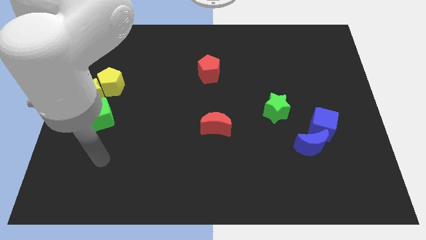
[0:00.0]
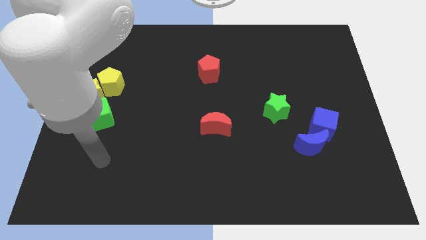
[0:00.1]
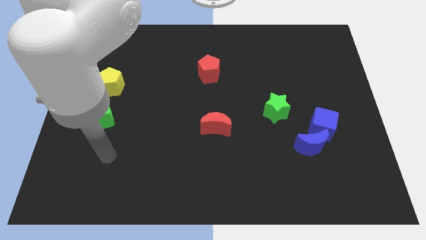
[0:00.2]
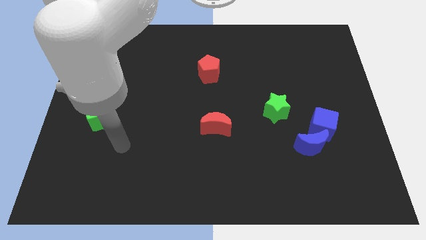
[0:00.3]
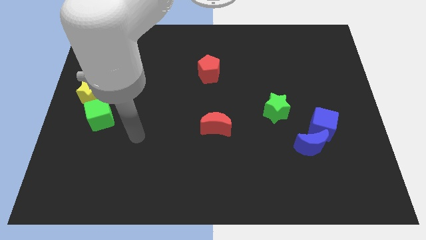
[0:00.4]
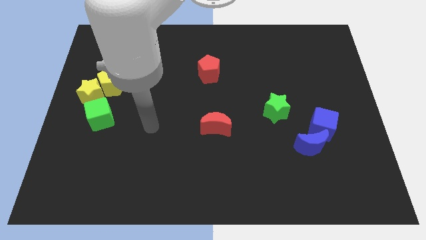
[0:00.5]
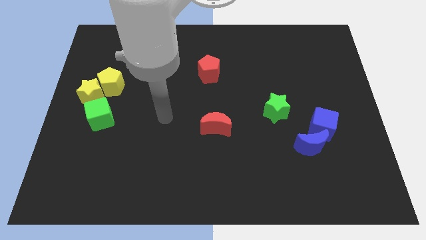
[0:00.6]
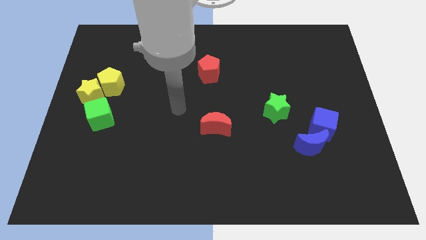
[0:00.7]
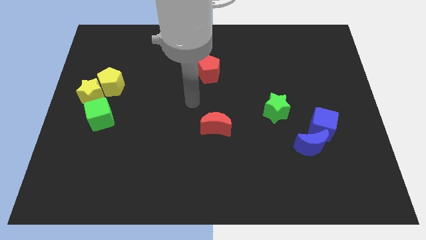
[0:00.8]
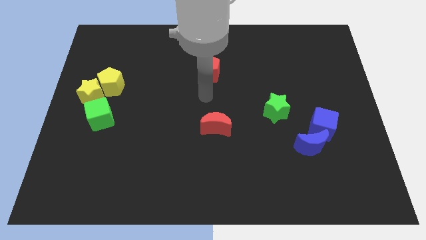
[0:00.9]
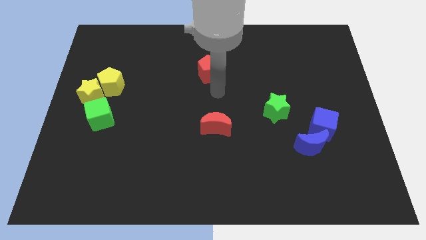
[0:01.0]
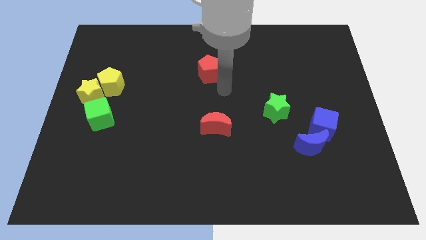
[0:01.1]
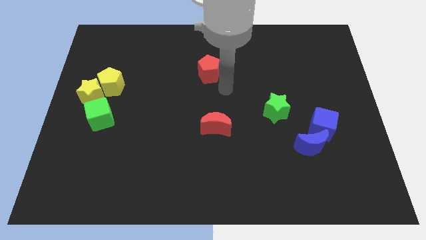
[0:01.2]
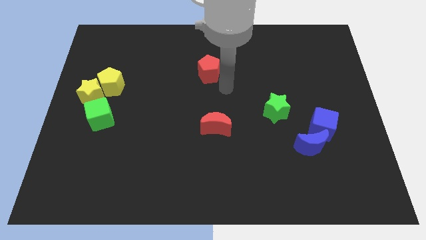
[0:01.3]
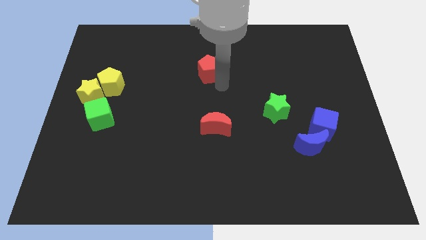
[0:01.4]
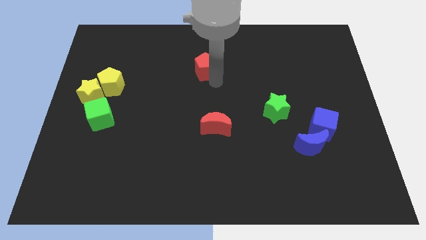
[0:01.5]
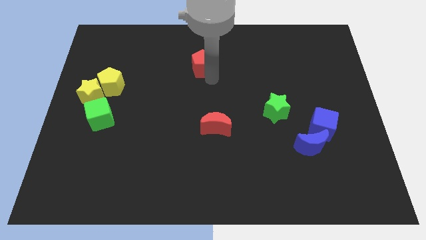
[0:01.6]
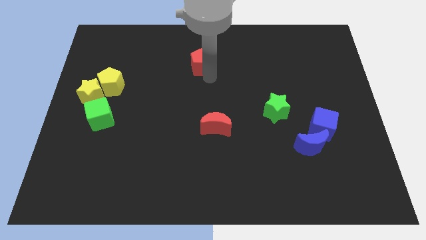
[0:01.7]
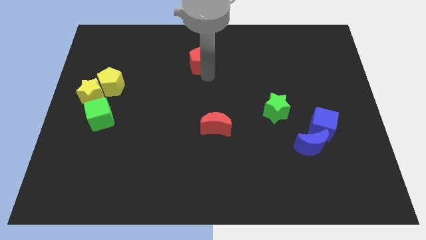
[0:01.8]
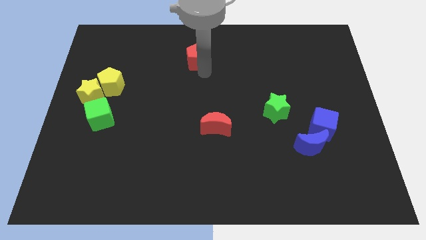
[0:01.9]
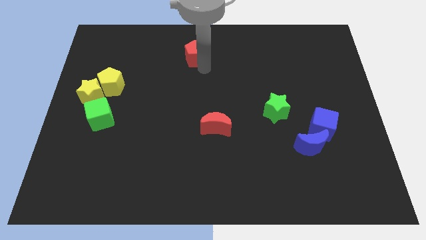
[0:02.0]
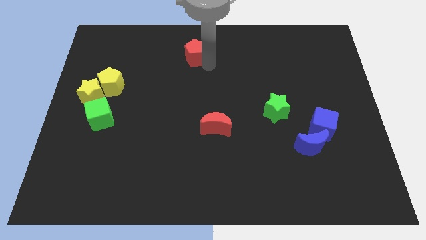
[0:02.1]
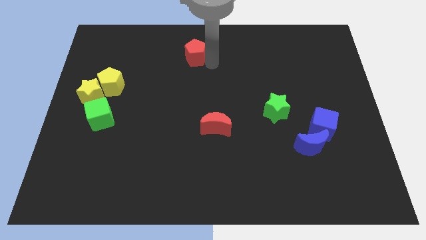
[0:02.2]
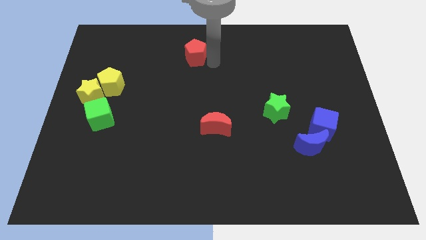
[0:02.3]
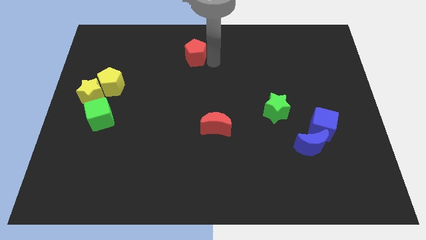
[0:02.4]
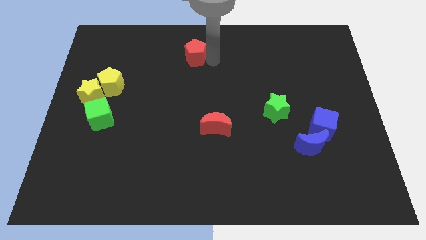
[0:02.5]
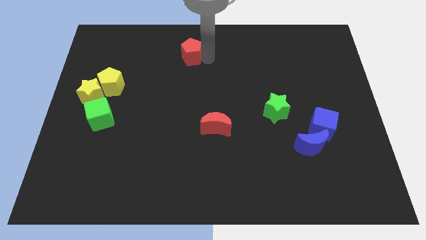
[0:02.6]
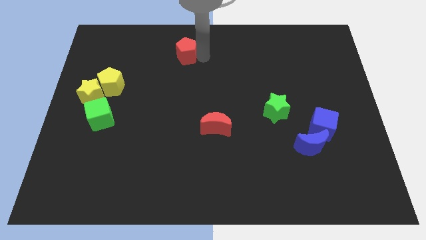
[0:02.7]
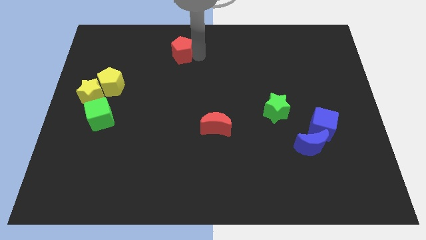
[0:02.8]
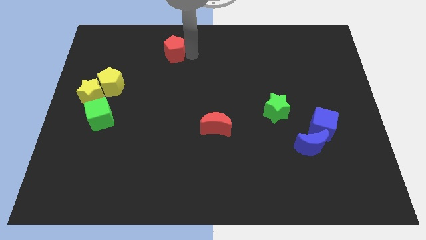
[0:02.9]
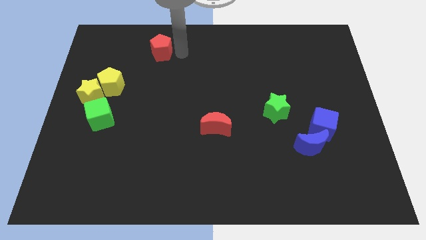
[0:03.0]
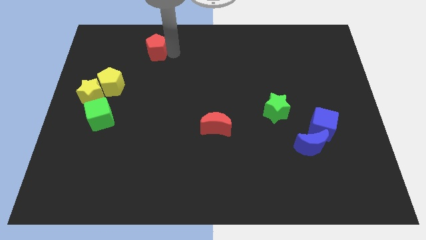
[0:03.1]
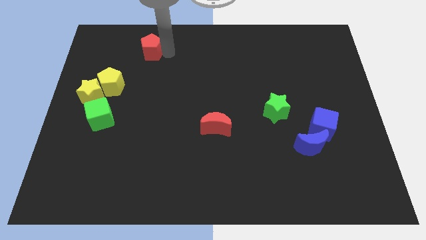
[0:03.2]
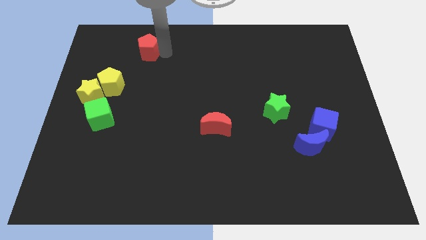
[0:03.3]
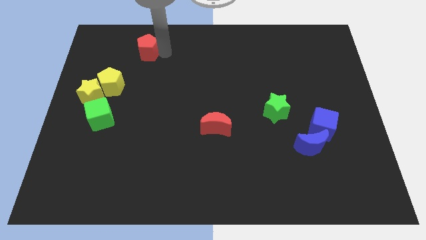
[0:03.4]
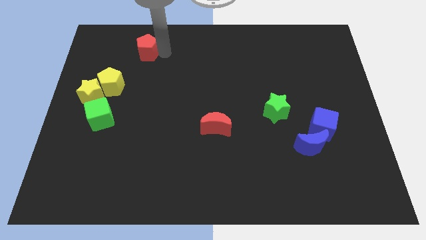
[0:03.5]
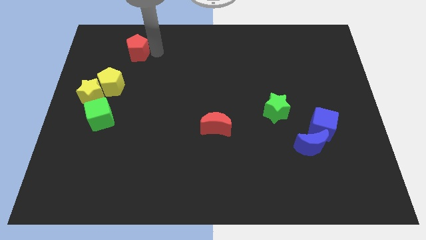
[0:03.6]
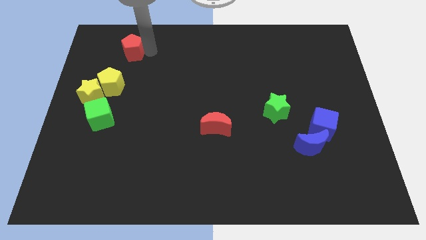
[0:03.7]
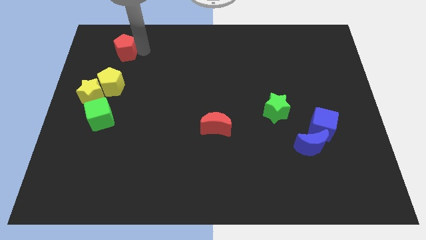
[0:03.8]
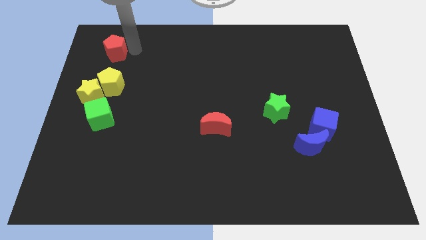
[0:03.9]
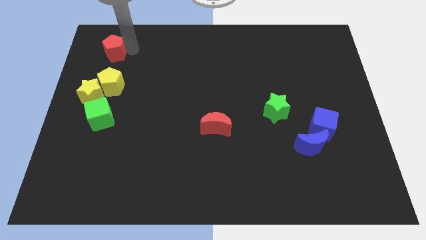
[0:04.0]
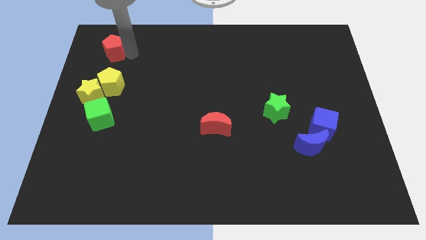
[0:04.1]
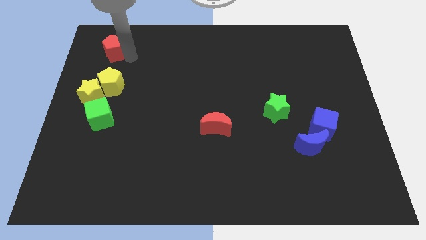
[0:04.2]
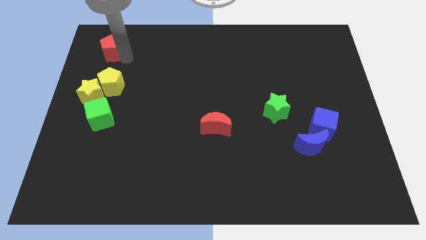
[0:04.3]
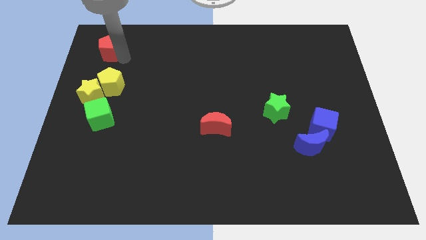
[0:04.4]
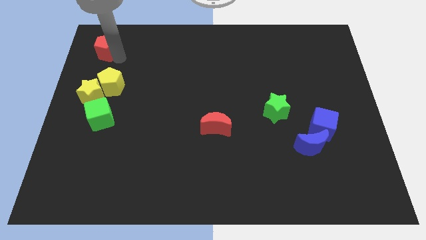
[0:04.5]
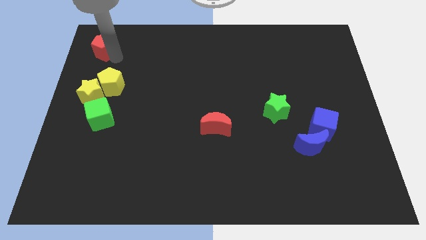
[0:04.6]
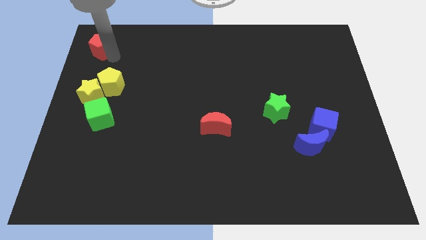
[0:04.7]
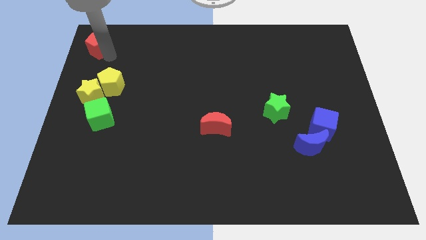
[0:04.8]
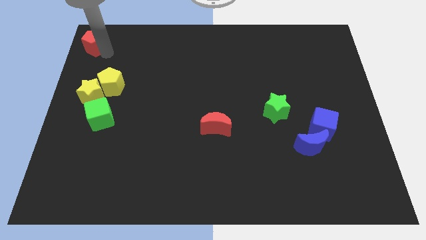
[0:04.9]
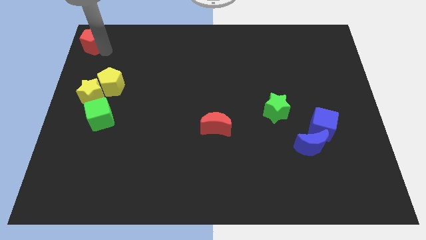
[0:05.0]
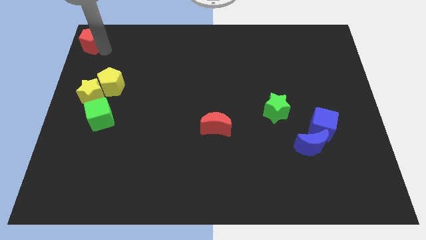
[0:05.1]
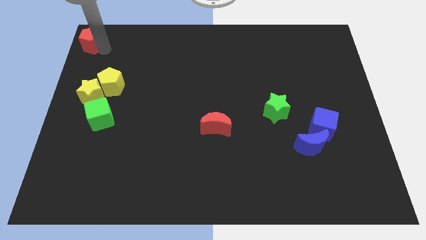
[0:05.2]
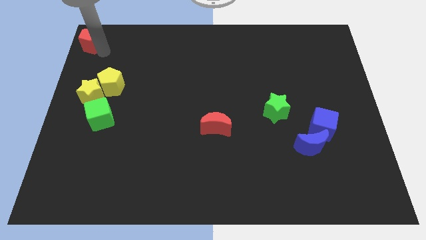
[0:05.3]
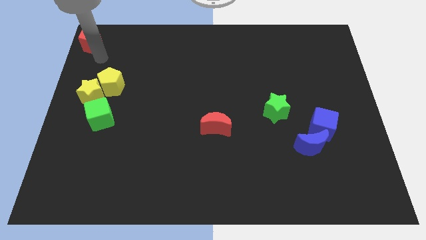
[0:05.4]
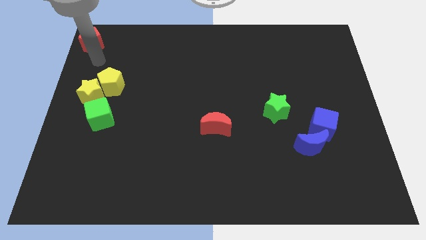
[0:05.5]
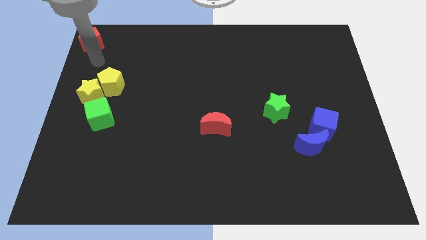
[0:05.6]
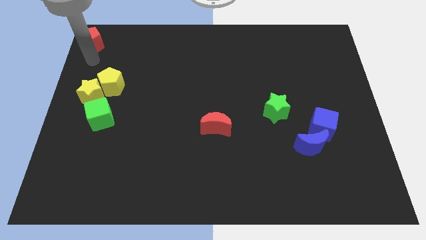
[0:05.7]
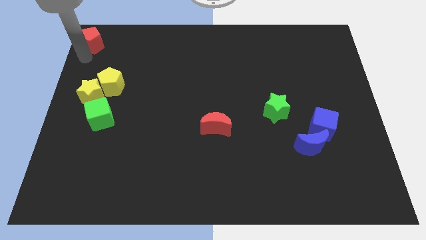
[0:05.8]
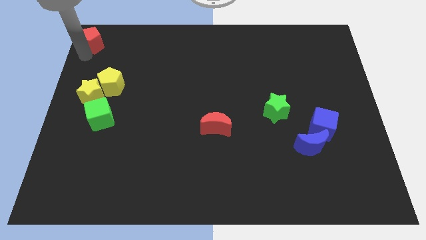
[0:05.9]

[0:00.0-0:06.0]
push the red pentagon to the top left corner

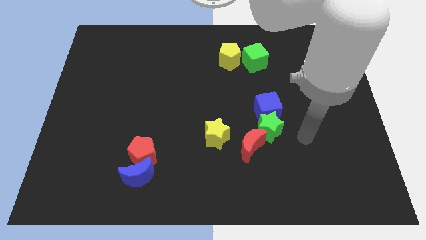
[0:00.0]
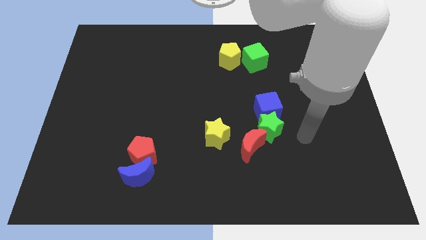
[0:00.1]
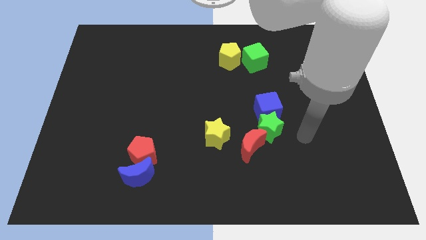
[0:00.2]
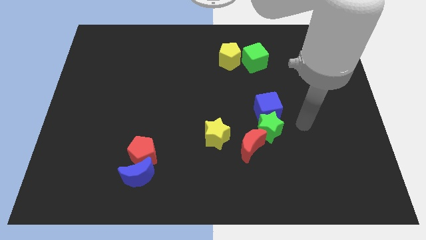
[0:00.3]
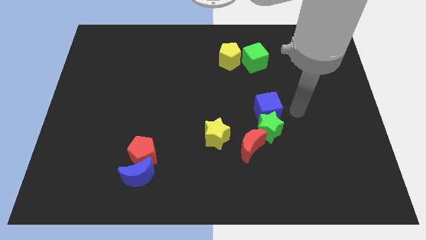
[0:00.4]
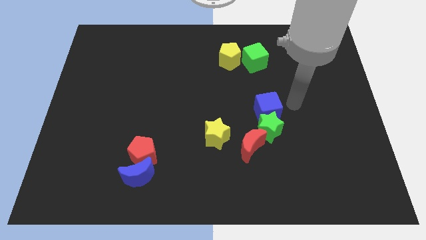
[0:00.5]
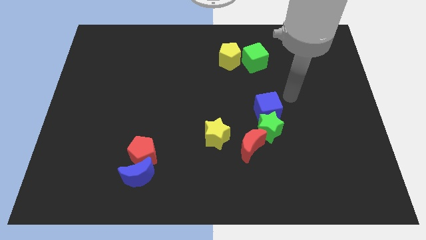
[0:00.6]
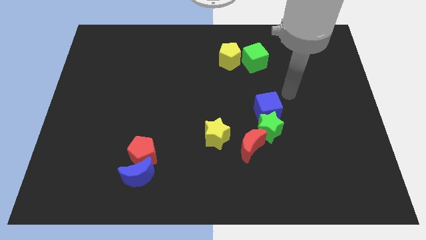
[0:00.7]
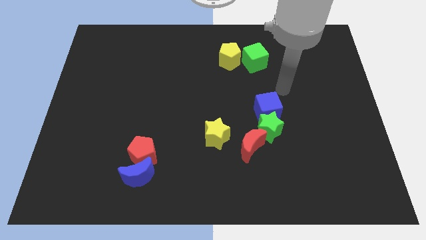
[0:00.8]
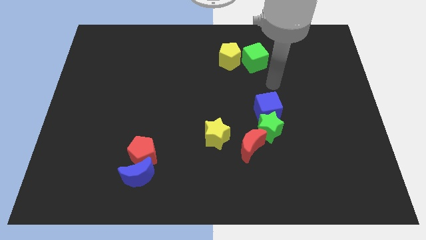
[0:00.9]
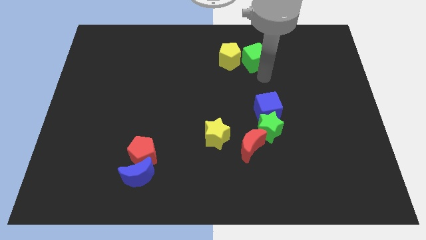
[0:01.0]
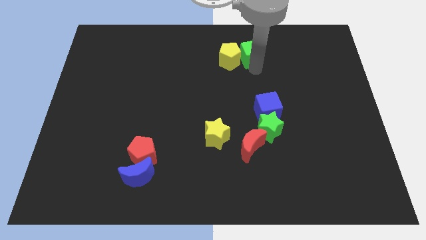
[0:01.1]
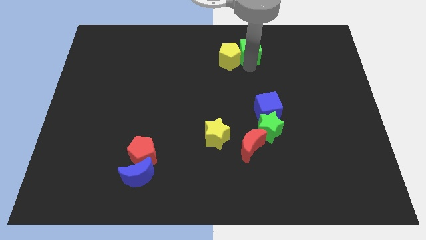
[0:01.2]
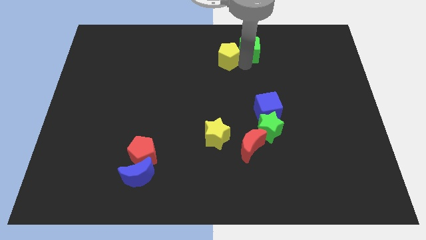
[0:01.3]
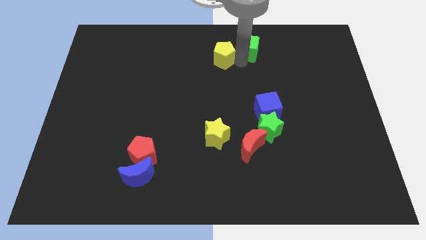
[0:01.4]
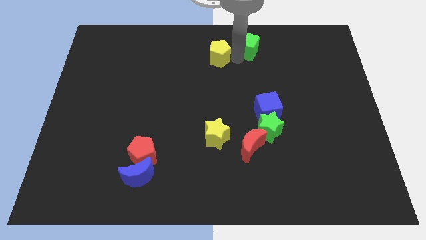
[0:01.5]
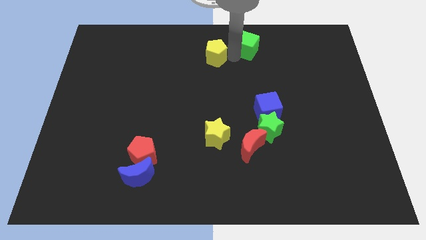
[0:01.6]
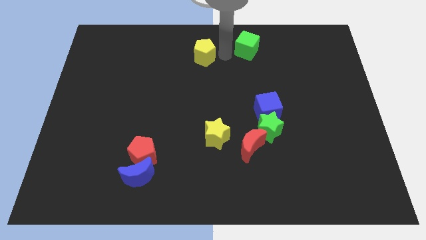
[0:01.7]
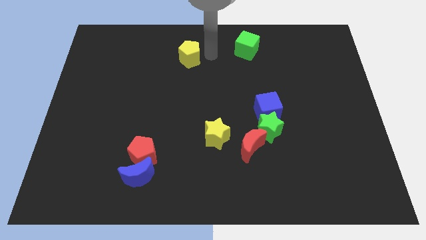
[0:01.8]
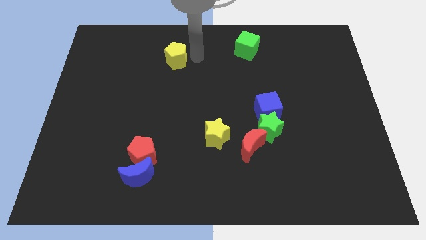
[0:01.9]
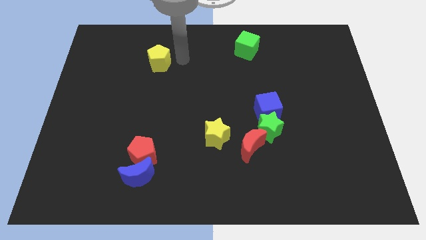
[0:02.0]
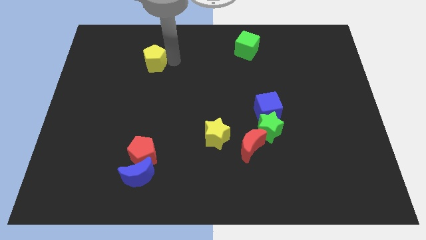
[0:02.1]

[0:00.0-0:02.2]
separate the yellow pentagon from the green cube

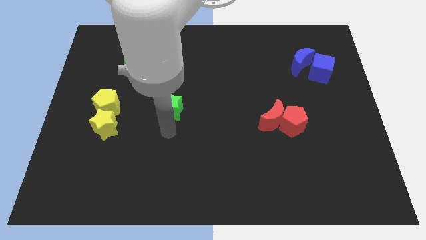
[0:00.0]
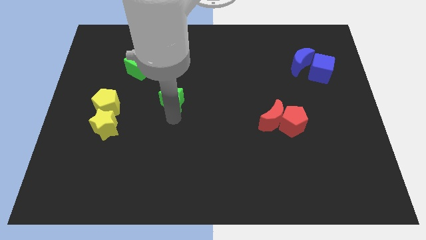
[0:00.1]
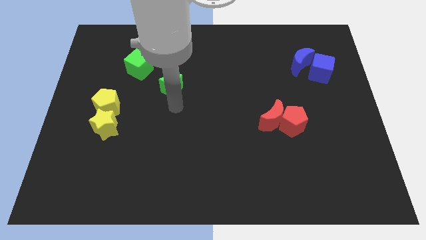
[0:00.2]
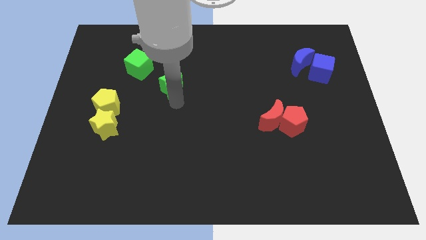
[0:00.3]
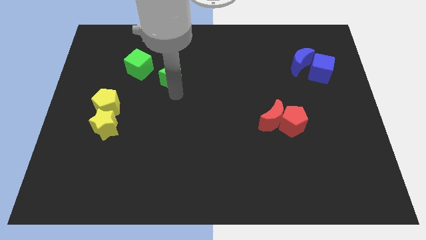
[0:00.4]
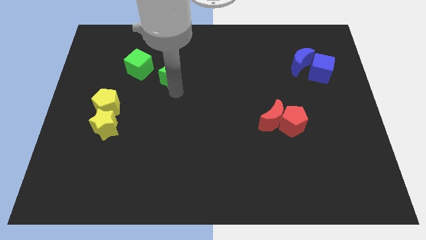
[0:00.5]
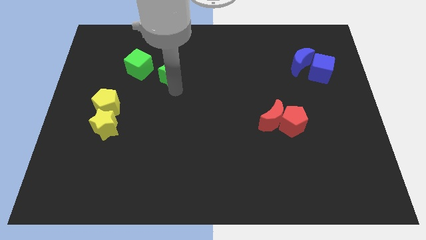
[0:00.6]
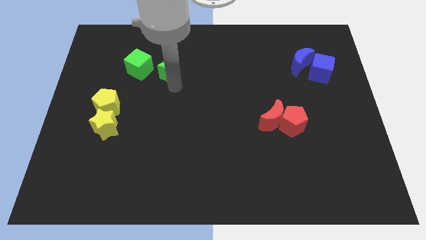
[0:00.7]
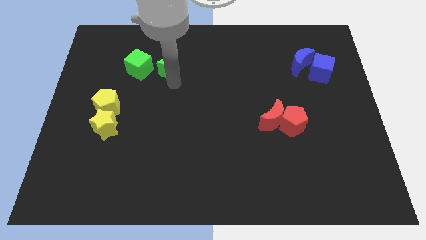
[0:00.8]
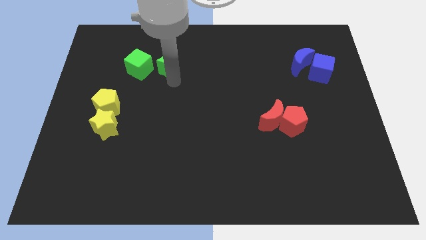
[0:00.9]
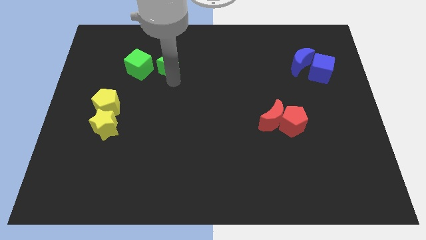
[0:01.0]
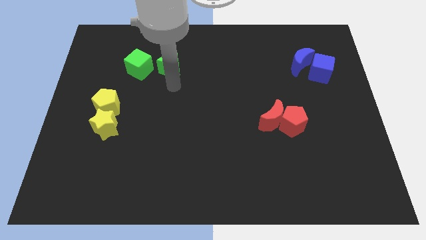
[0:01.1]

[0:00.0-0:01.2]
push the green star to the right of the green cube
